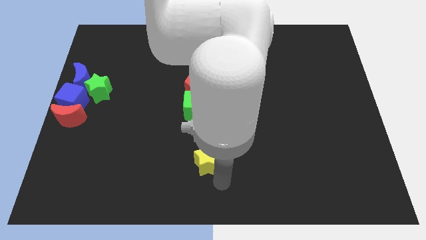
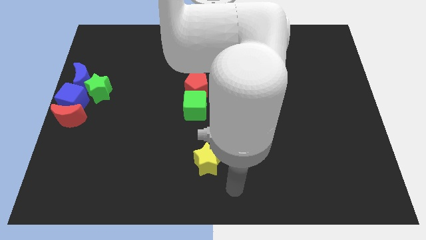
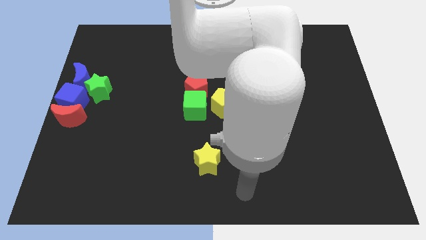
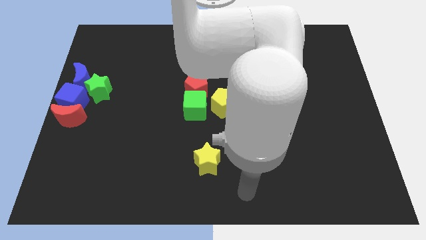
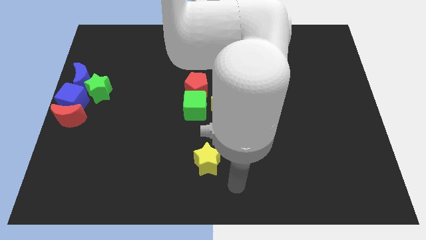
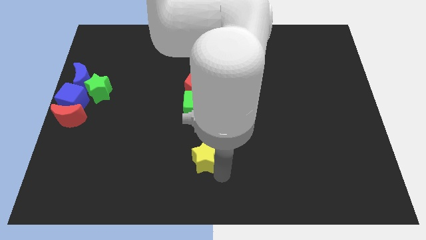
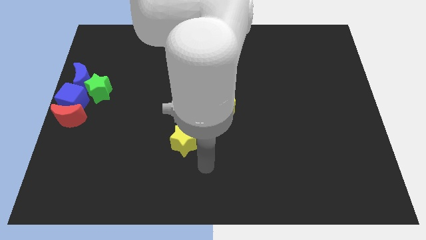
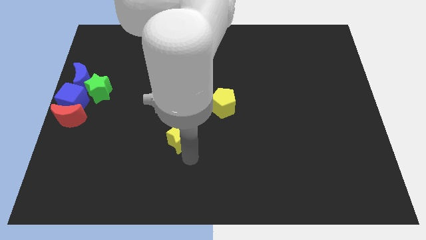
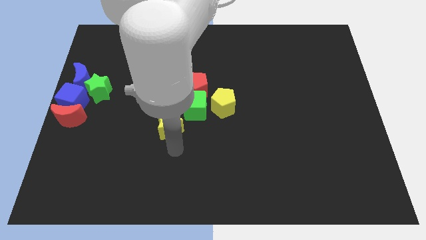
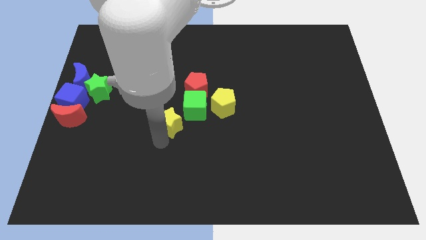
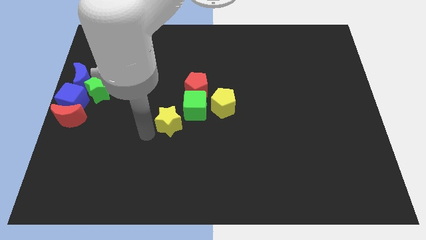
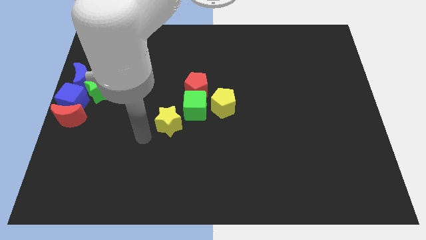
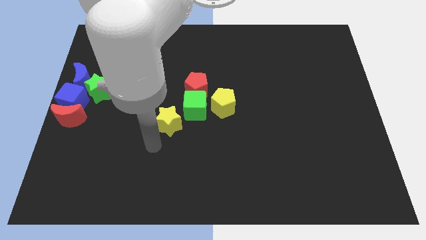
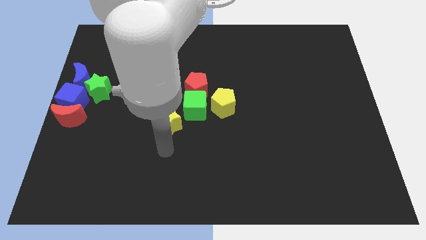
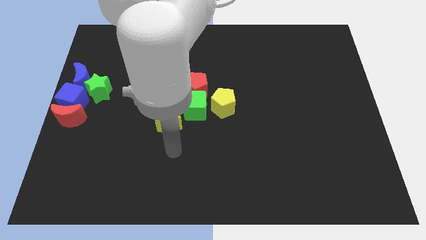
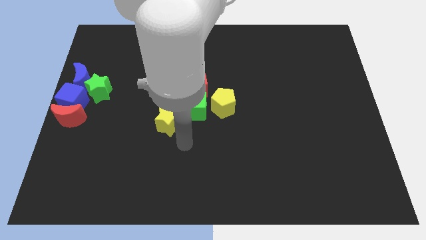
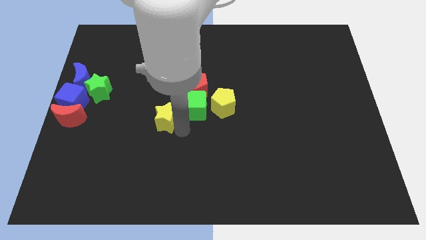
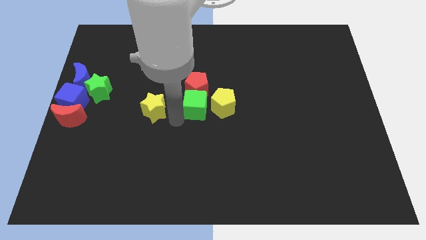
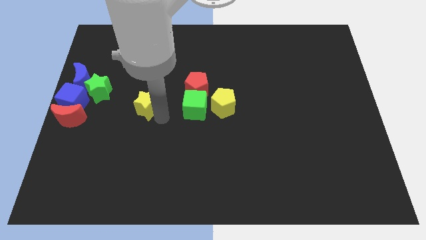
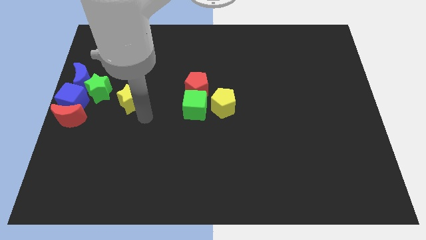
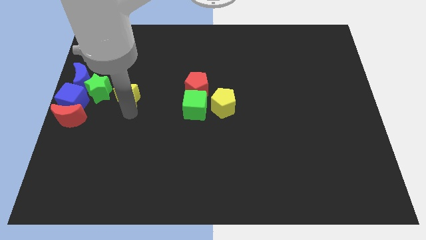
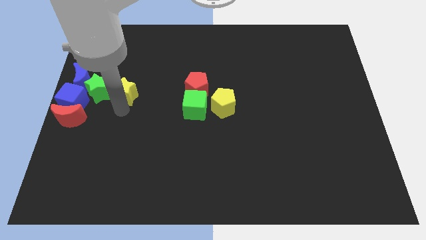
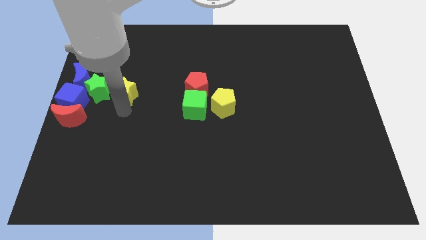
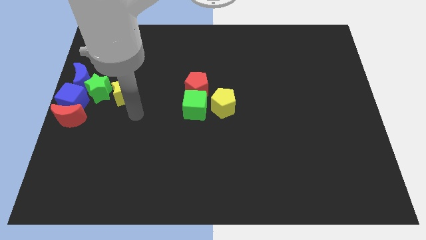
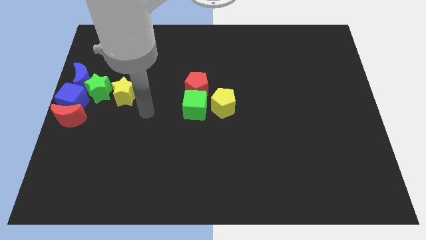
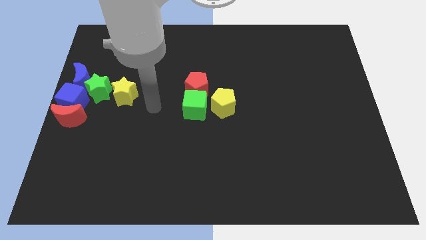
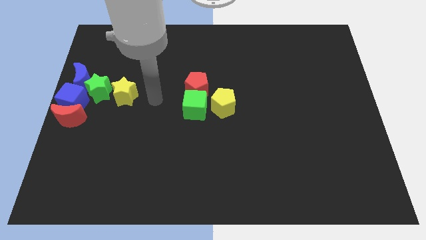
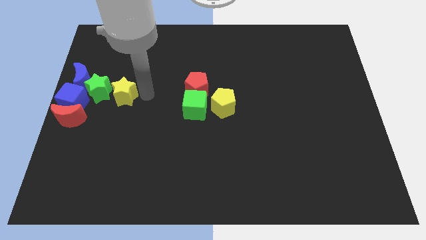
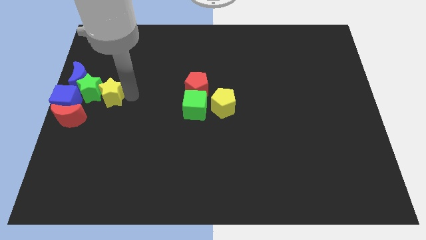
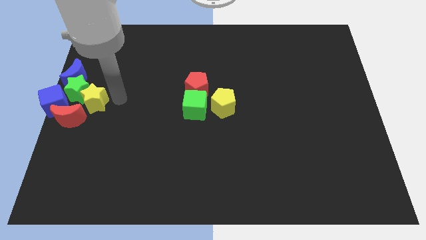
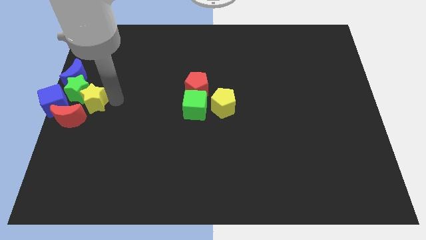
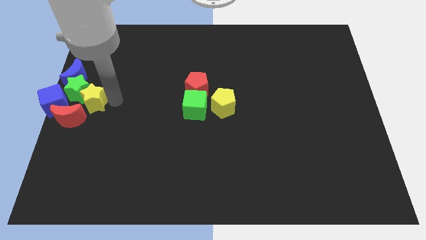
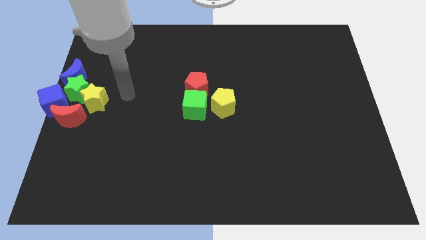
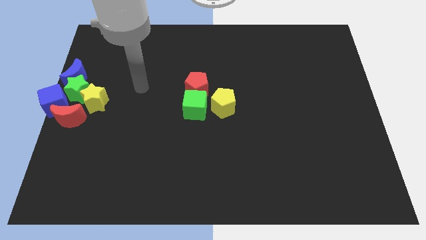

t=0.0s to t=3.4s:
put the yellow star into the green star

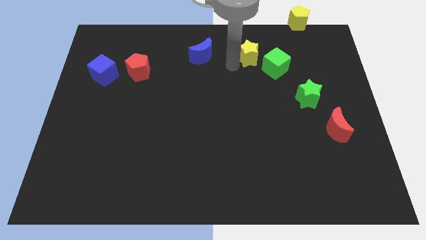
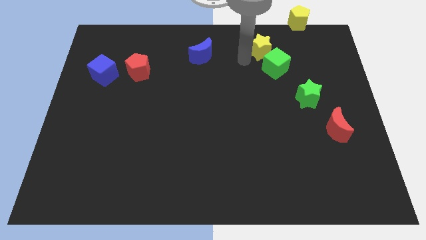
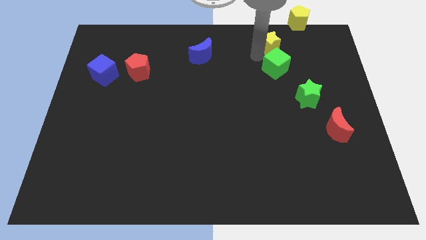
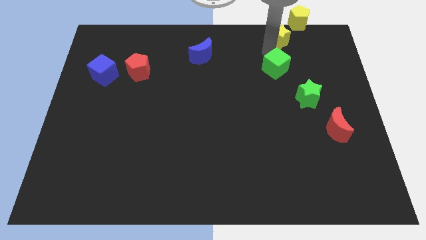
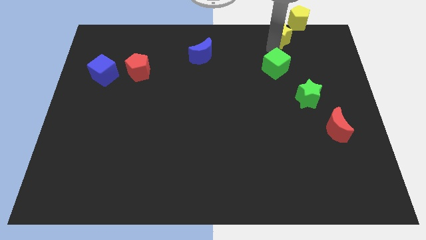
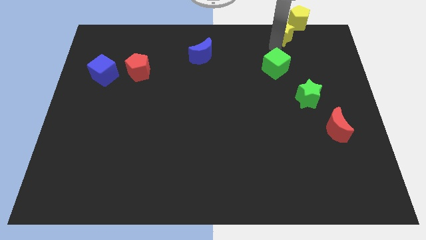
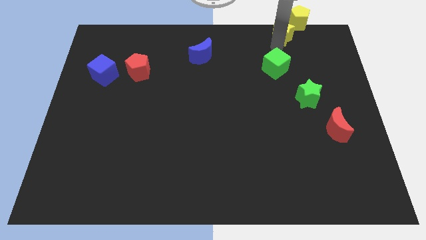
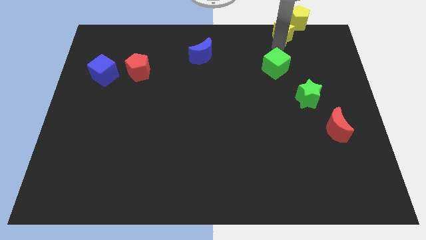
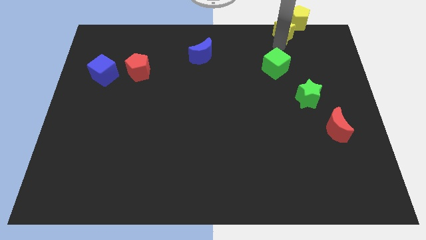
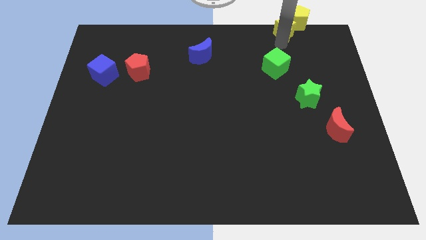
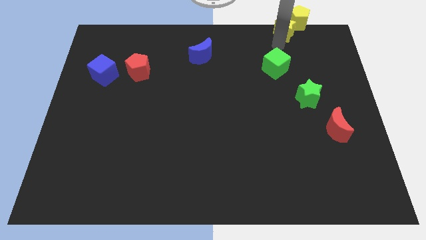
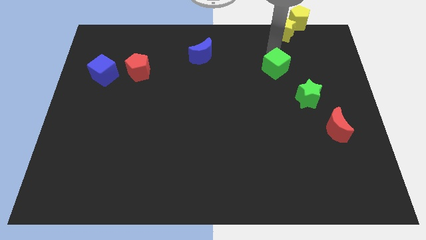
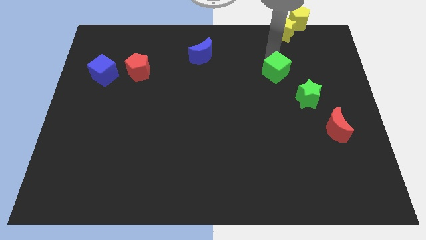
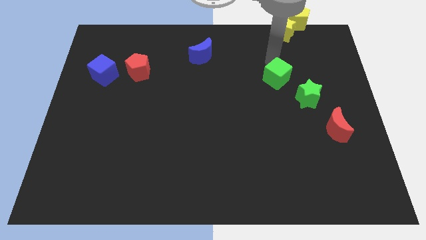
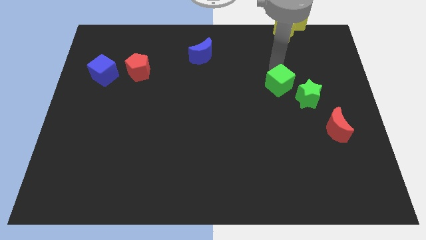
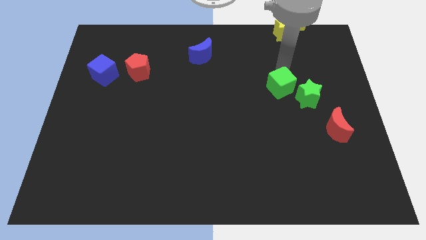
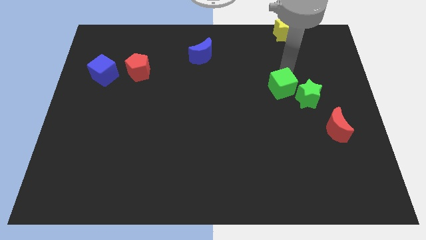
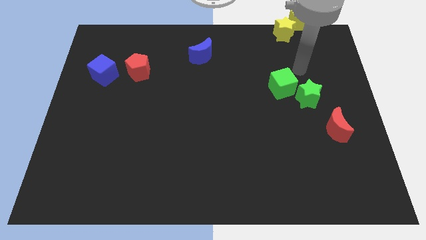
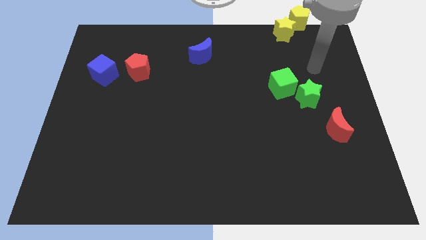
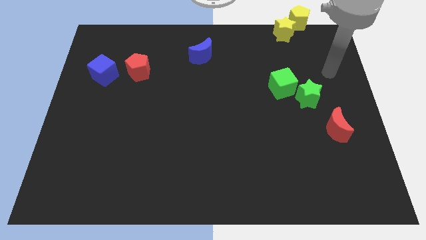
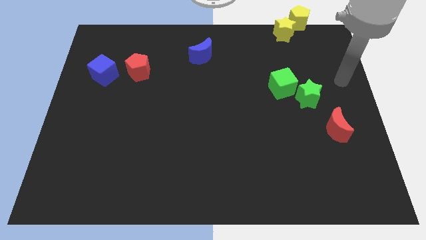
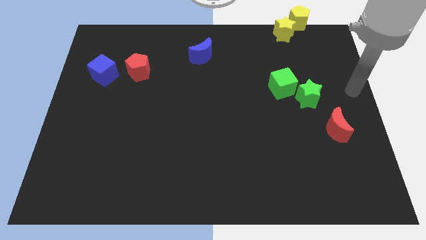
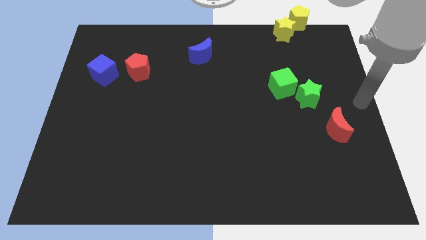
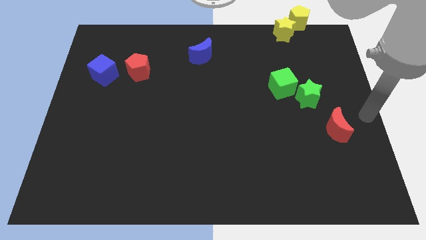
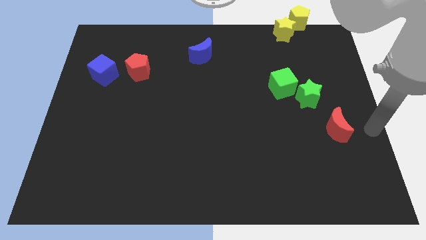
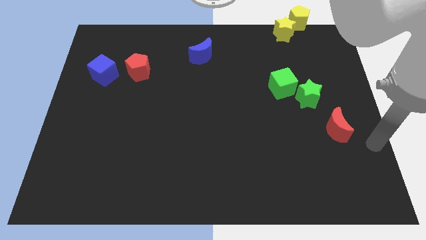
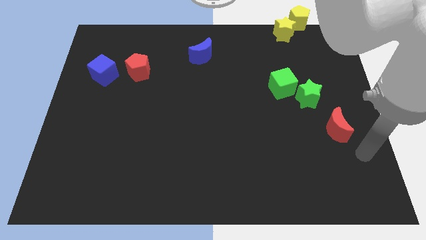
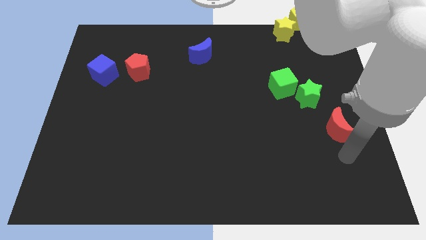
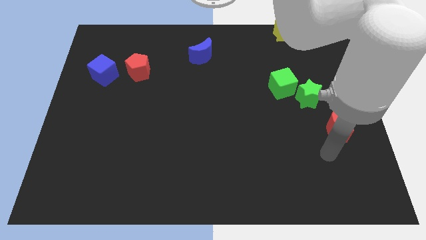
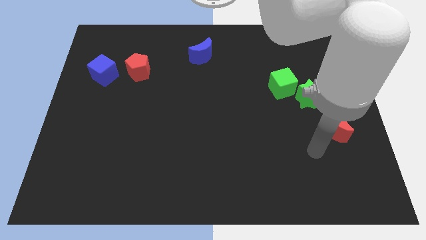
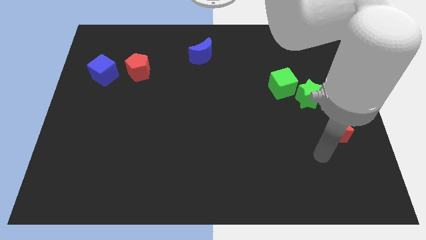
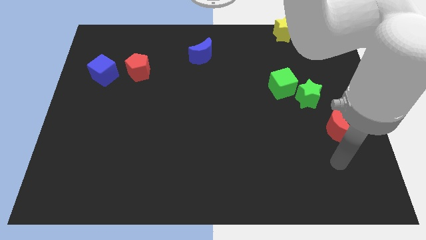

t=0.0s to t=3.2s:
move the yellow star to the bottom of the yellow pentagon

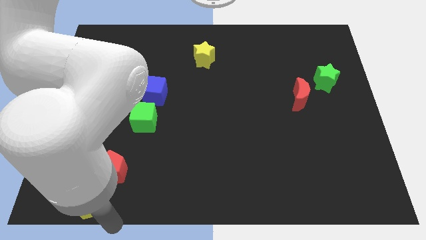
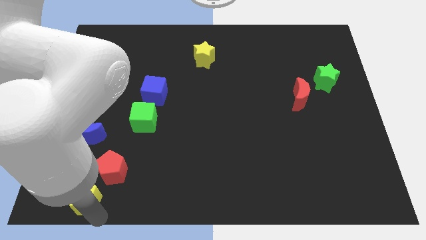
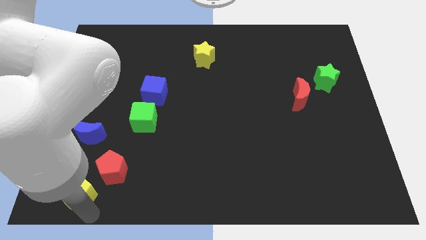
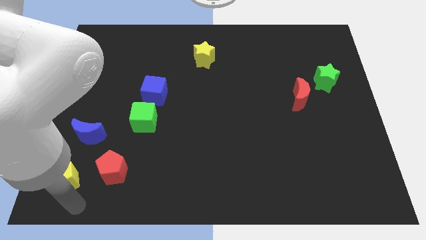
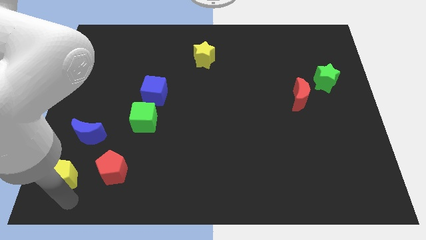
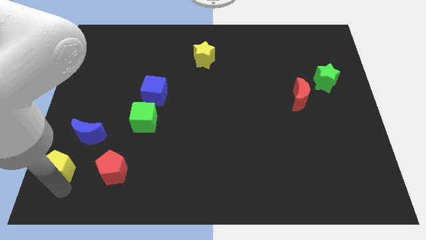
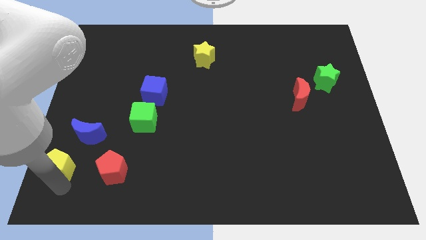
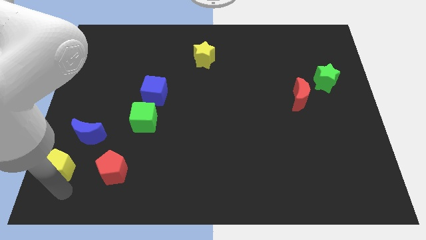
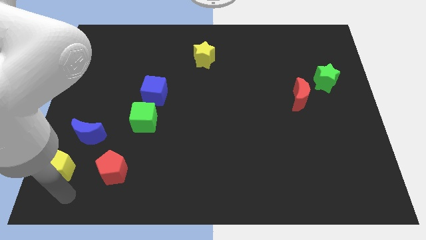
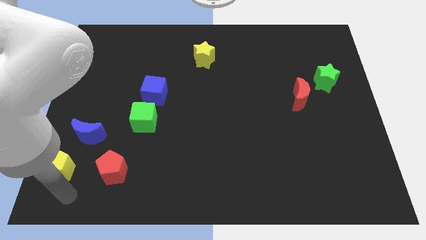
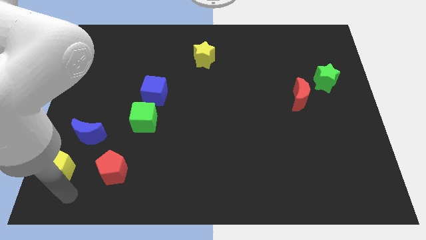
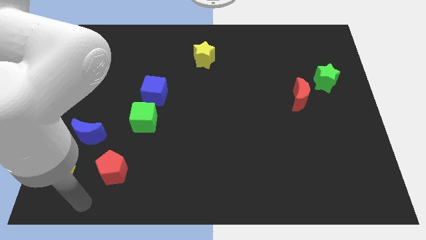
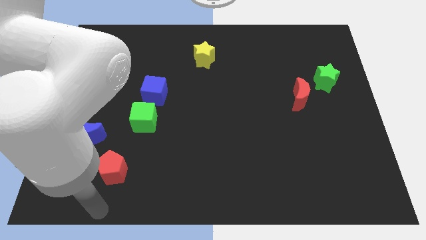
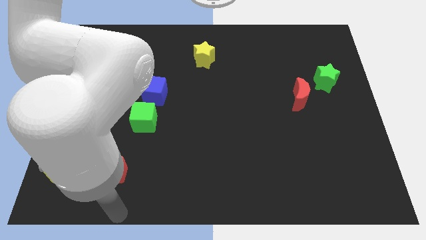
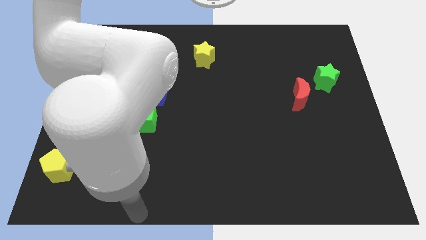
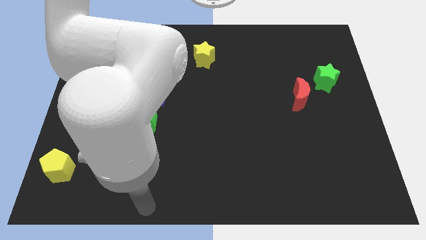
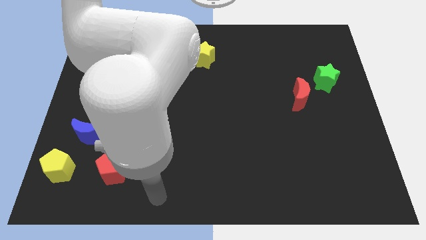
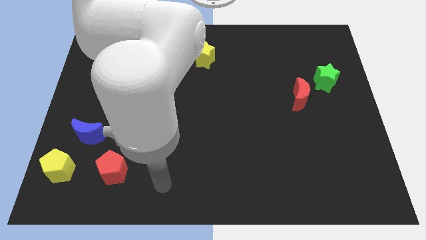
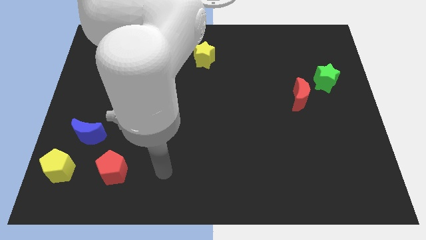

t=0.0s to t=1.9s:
place the yellow pentagon to the left of the red pentagon

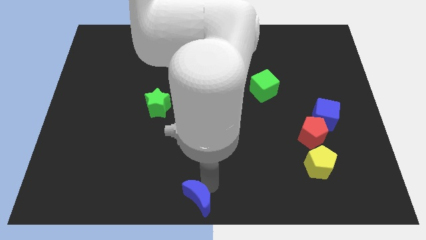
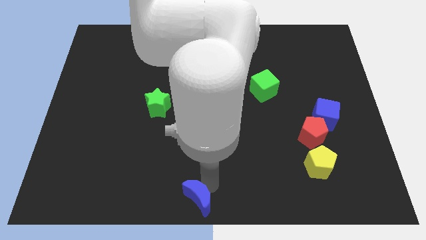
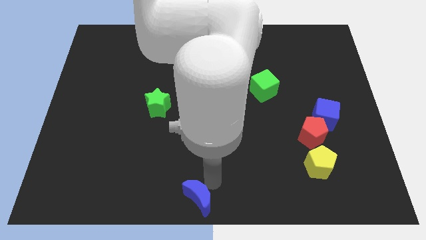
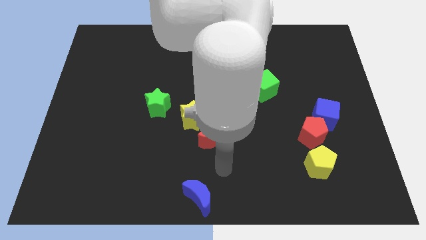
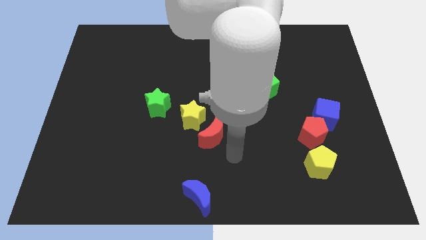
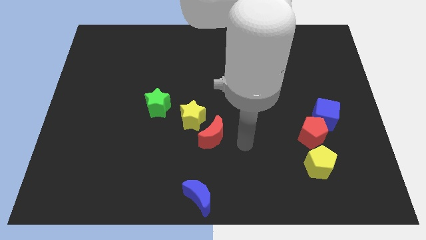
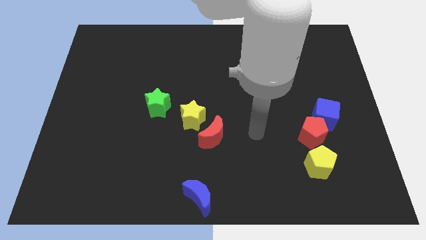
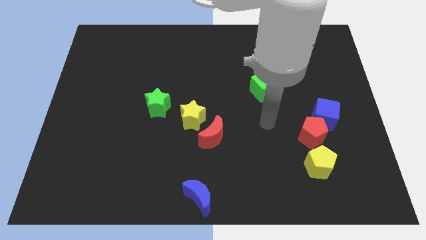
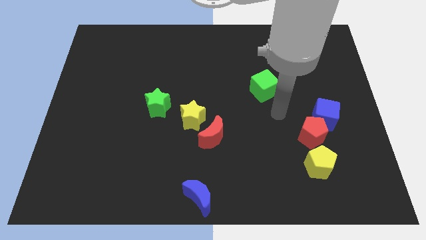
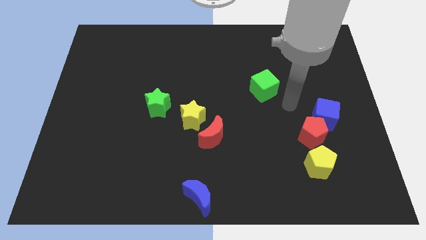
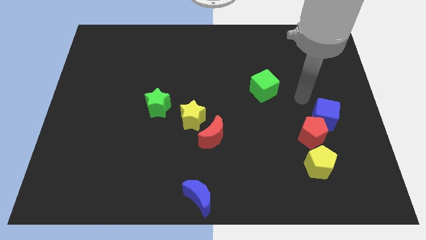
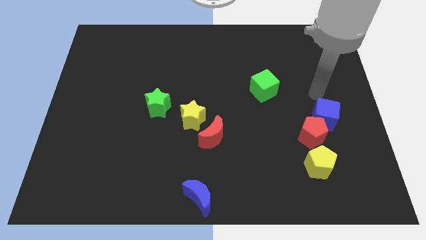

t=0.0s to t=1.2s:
move away from the blue moon
